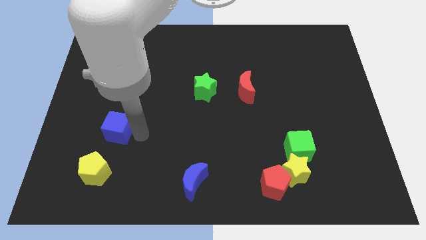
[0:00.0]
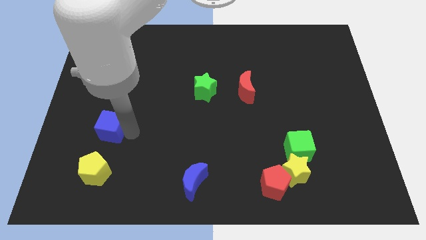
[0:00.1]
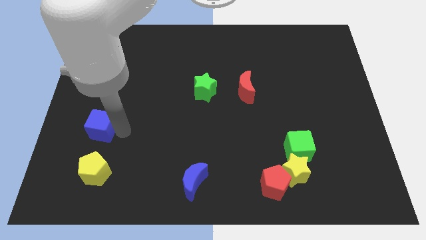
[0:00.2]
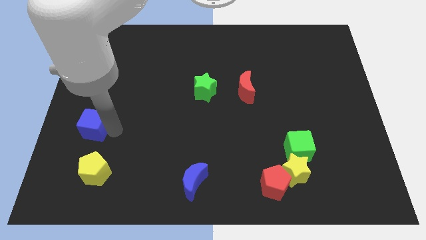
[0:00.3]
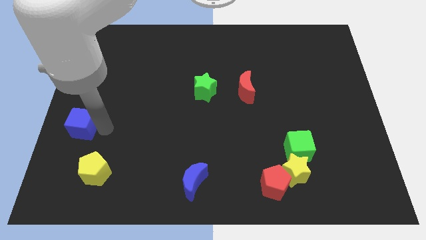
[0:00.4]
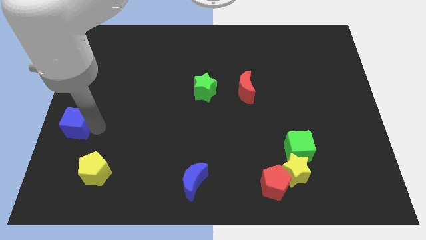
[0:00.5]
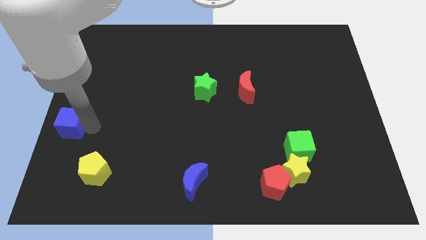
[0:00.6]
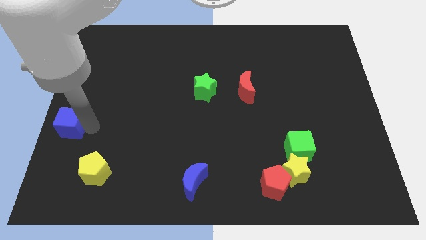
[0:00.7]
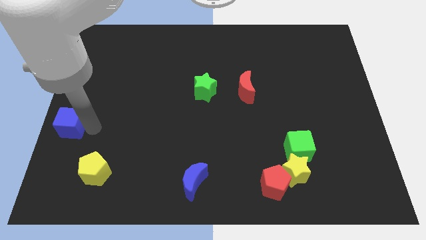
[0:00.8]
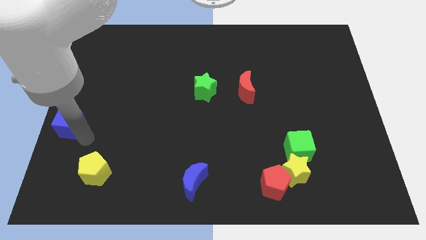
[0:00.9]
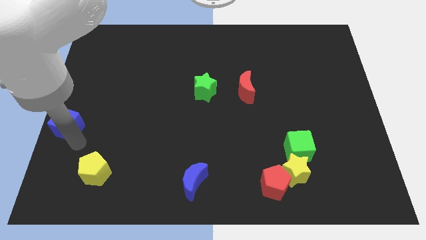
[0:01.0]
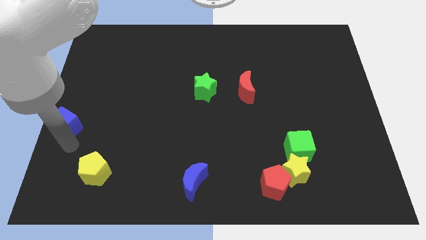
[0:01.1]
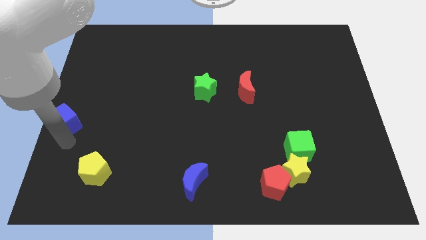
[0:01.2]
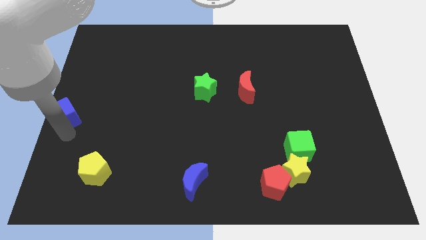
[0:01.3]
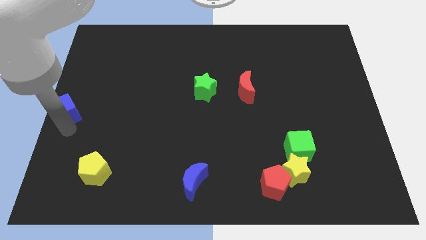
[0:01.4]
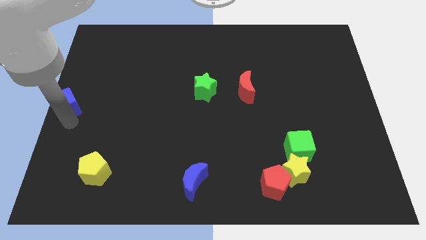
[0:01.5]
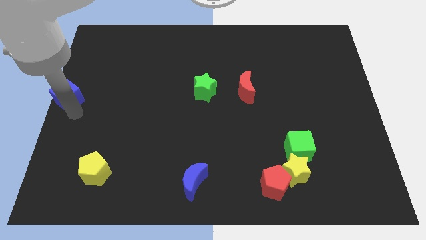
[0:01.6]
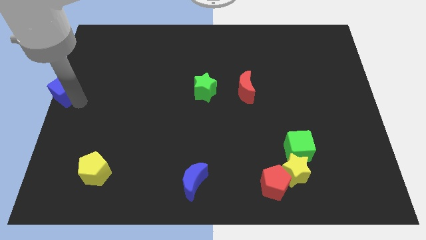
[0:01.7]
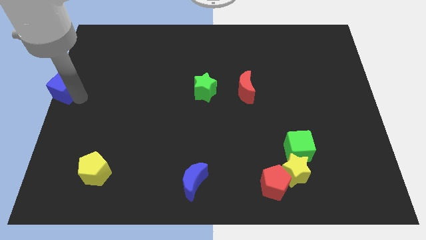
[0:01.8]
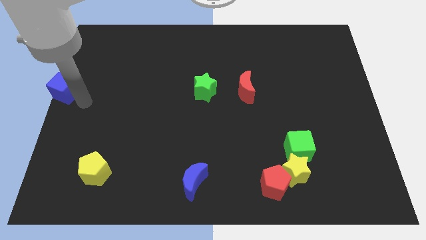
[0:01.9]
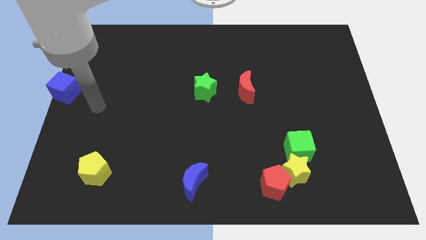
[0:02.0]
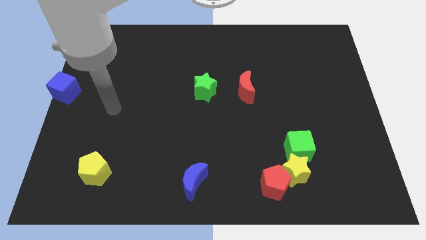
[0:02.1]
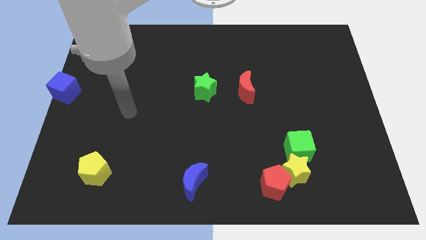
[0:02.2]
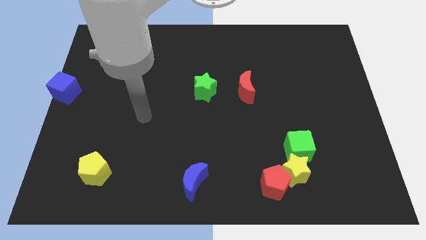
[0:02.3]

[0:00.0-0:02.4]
place the blue cube parallel to green star

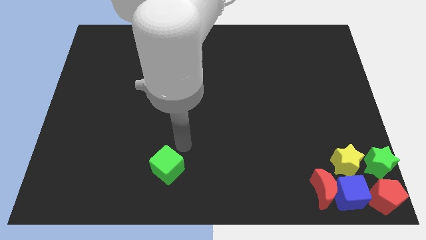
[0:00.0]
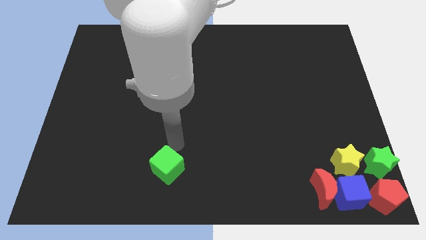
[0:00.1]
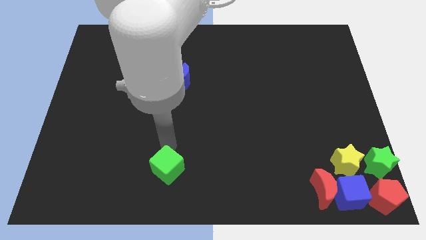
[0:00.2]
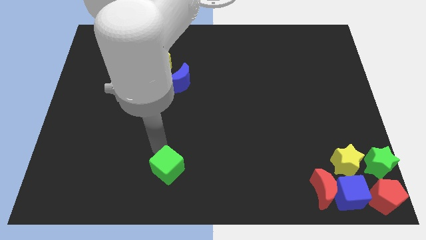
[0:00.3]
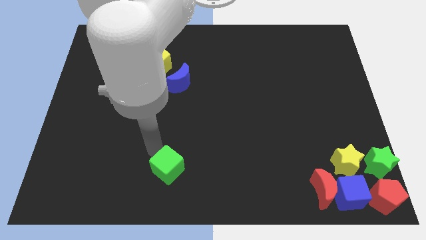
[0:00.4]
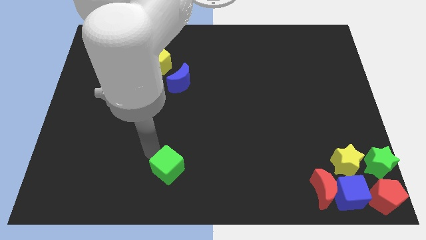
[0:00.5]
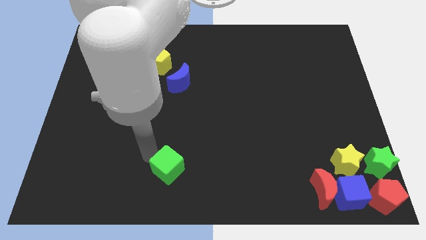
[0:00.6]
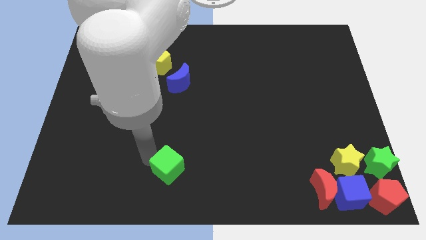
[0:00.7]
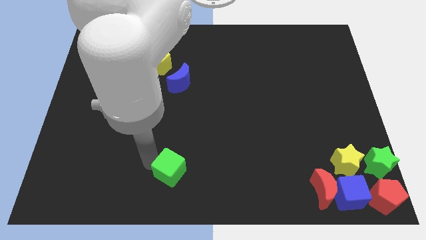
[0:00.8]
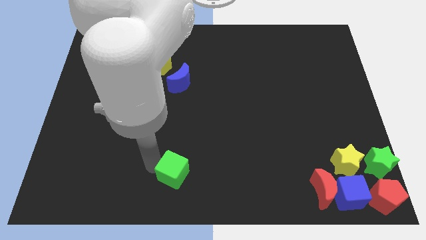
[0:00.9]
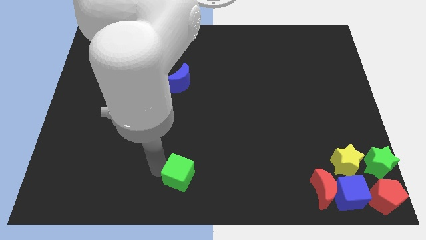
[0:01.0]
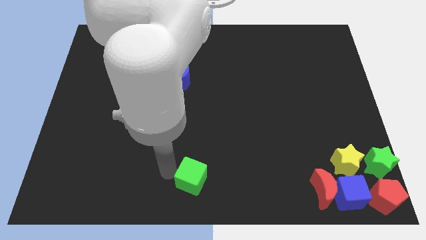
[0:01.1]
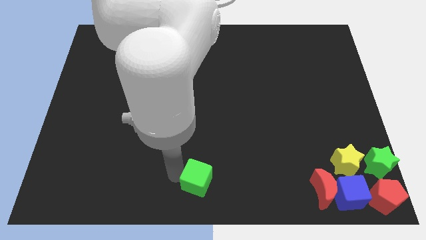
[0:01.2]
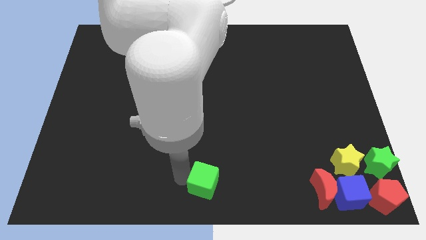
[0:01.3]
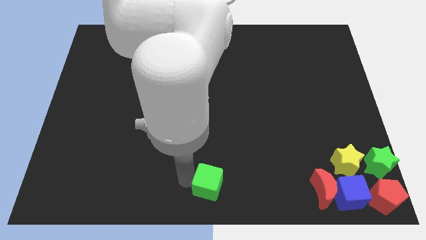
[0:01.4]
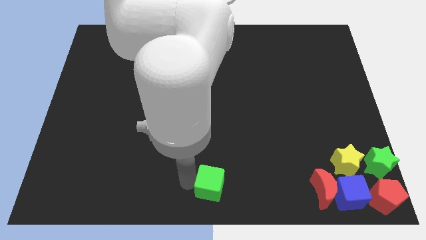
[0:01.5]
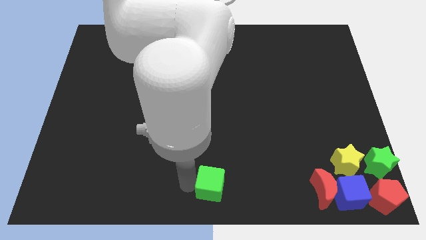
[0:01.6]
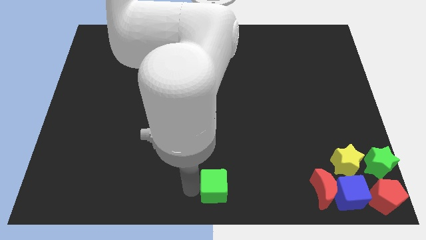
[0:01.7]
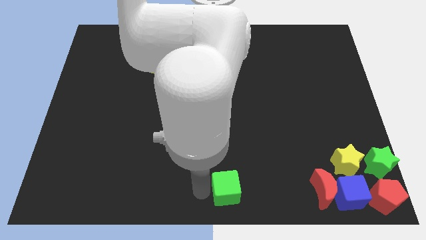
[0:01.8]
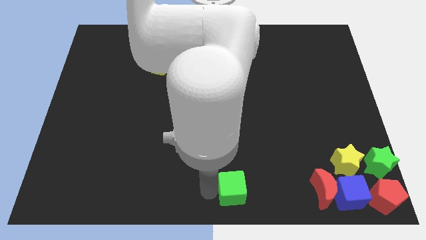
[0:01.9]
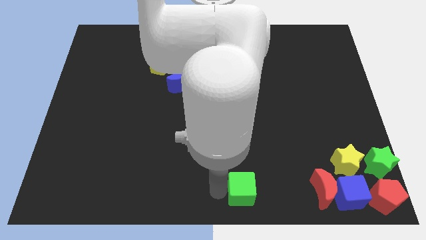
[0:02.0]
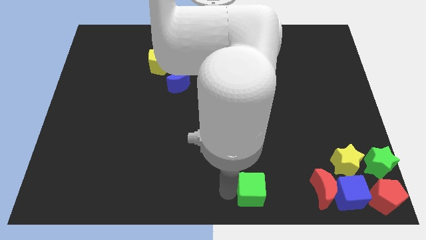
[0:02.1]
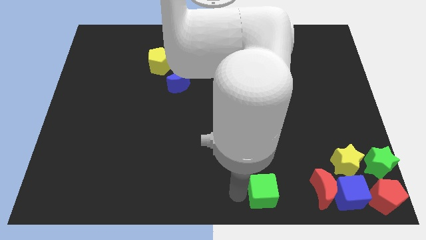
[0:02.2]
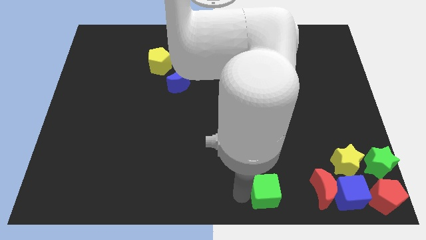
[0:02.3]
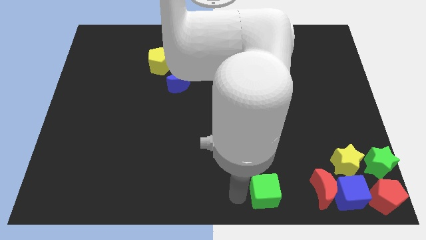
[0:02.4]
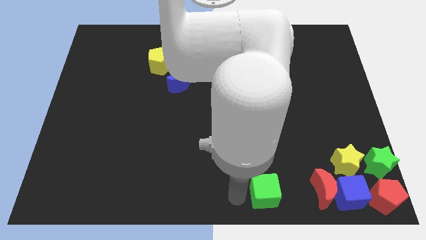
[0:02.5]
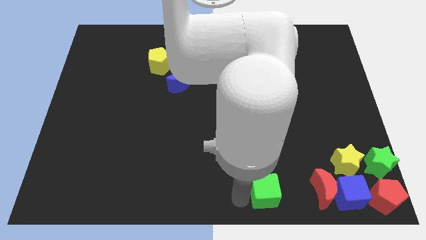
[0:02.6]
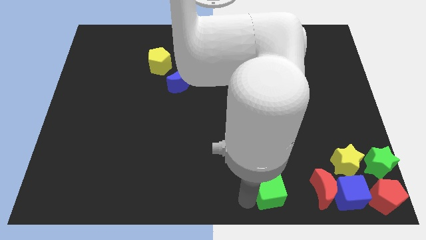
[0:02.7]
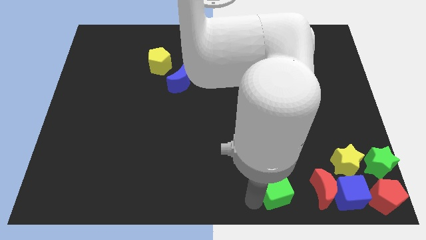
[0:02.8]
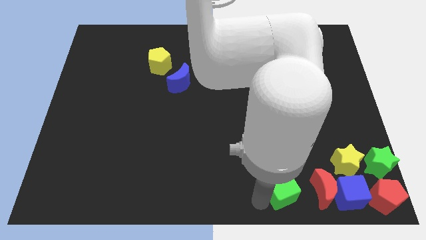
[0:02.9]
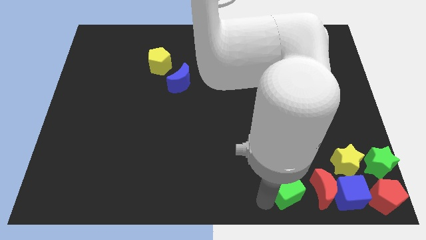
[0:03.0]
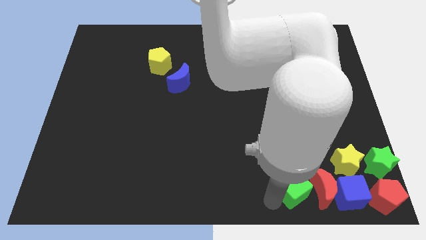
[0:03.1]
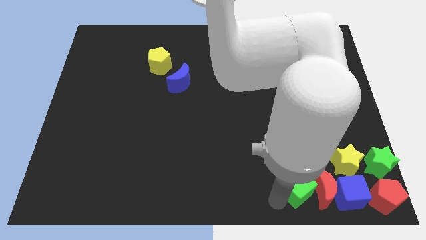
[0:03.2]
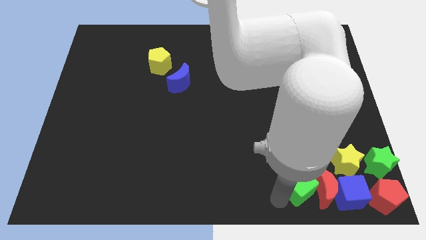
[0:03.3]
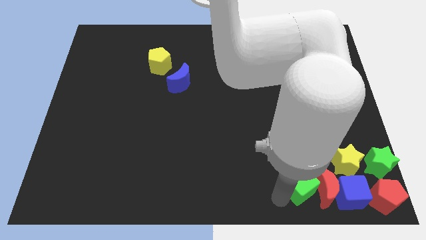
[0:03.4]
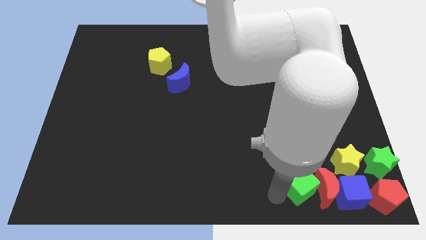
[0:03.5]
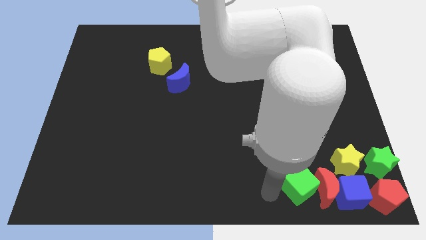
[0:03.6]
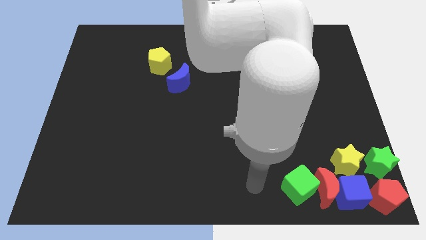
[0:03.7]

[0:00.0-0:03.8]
move the green cube into left of red moon

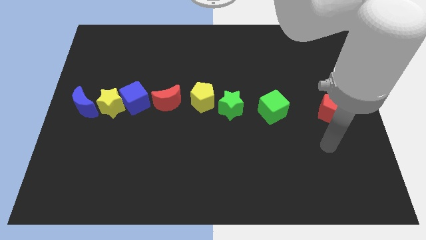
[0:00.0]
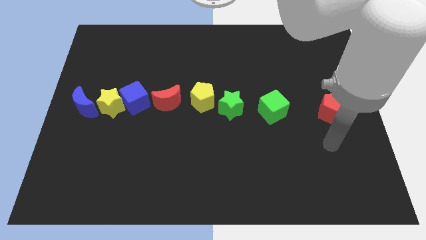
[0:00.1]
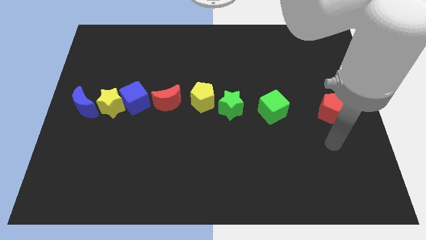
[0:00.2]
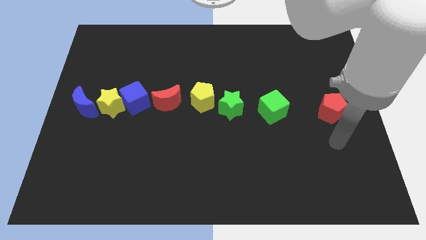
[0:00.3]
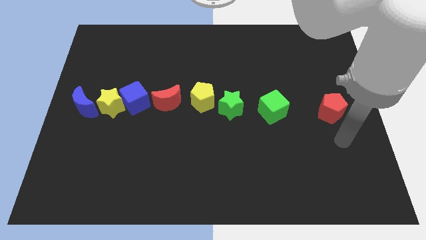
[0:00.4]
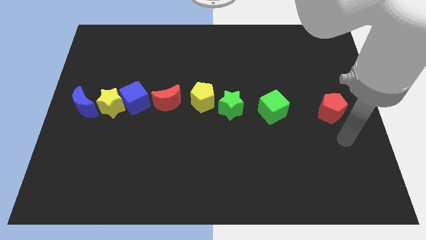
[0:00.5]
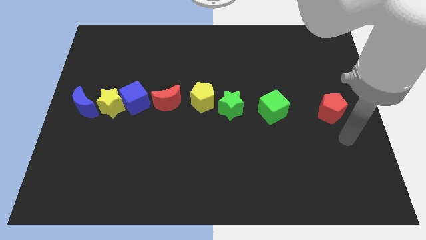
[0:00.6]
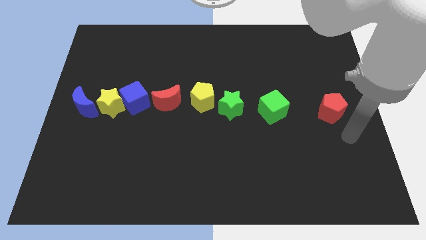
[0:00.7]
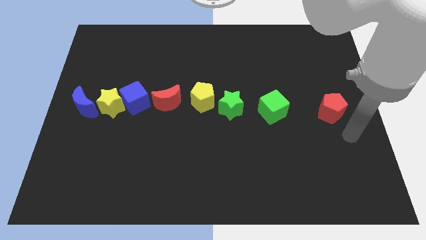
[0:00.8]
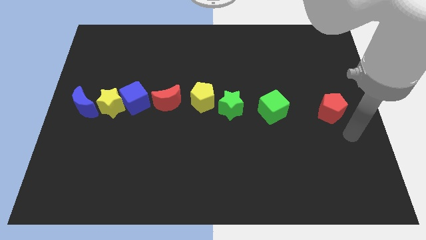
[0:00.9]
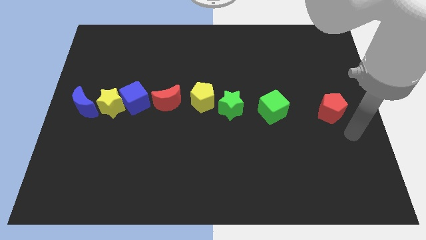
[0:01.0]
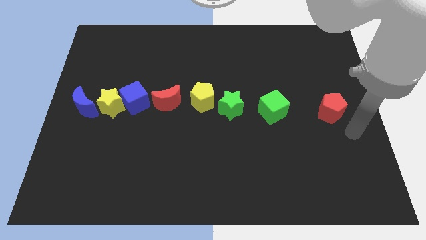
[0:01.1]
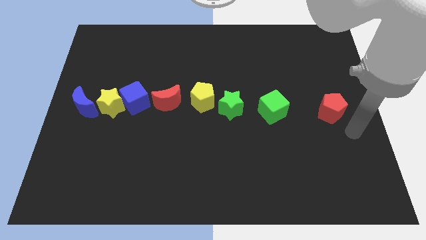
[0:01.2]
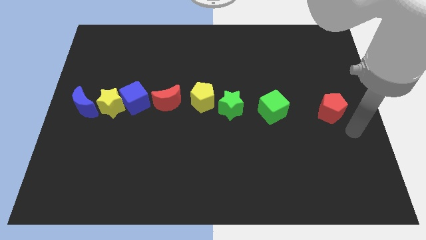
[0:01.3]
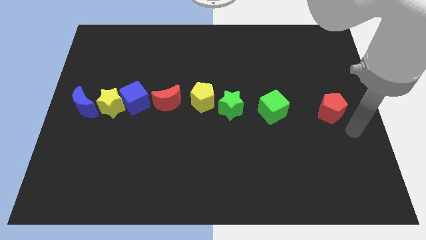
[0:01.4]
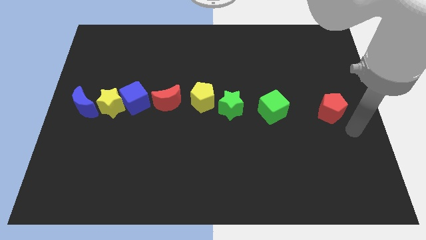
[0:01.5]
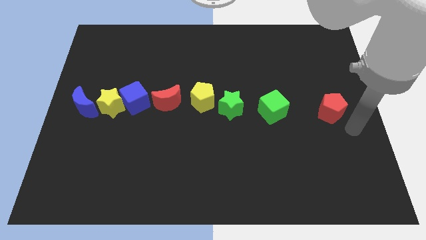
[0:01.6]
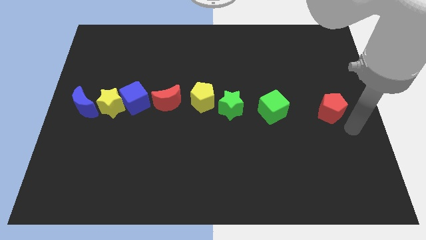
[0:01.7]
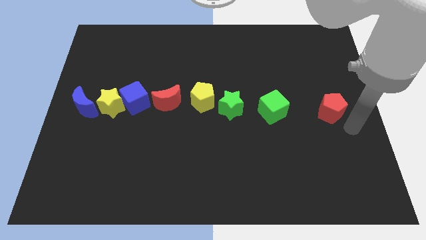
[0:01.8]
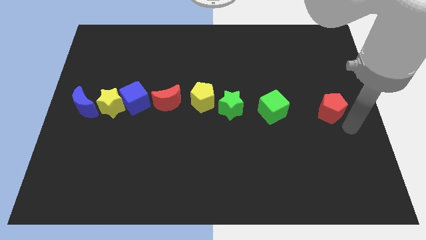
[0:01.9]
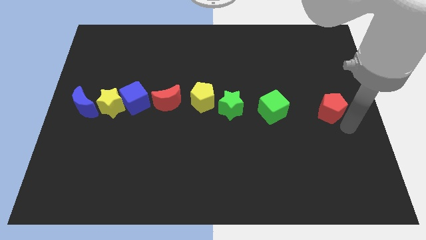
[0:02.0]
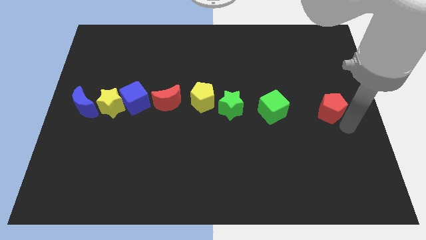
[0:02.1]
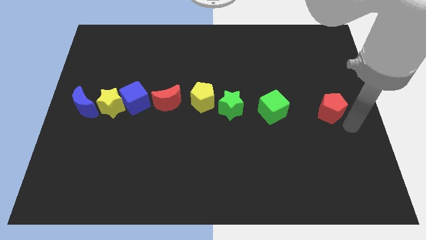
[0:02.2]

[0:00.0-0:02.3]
point the arm to the bottom right side of the red pentagon

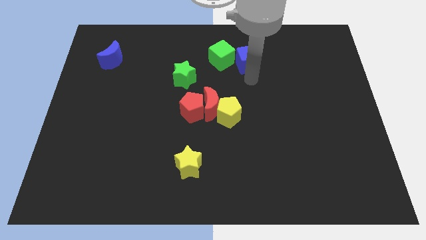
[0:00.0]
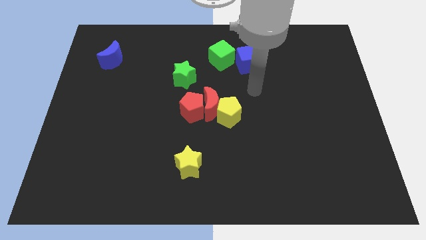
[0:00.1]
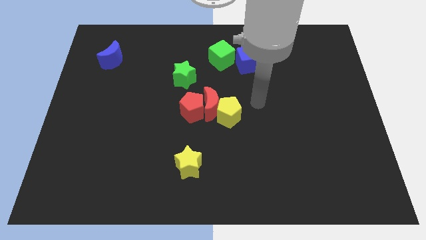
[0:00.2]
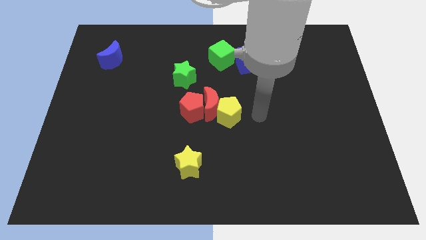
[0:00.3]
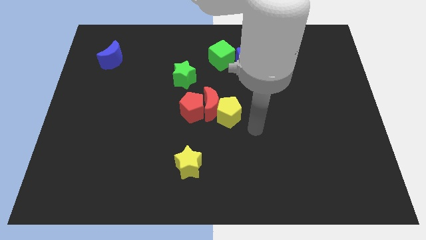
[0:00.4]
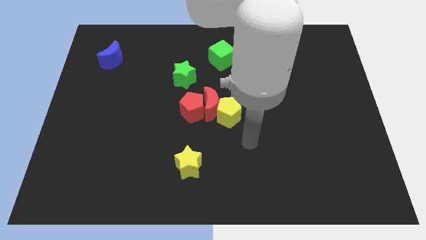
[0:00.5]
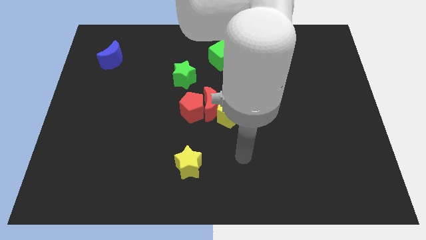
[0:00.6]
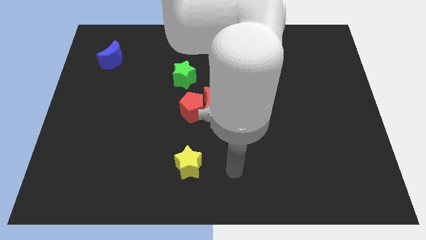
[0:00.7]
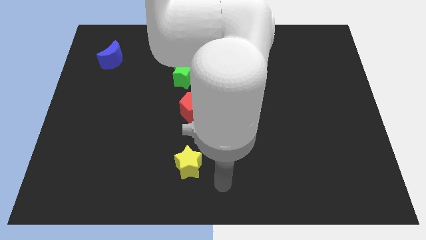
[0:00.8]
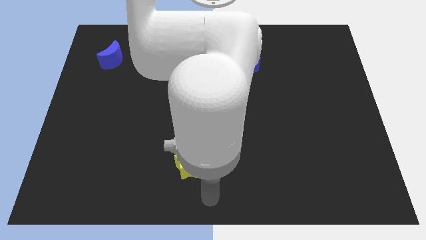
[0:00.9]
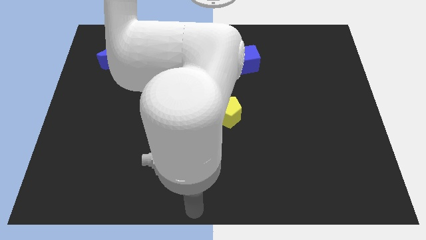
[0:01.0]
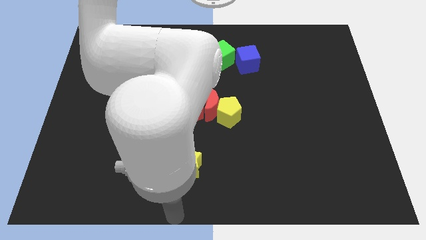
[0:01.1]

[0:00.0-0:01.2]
move your arm below the yellow star
